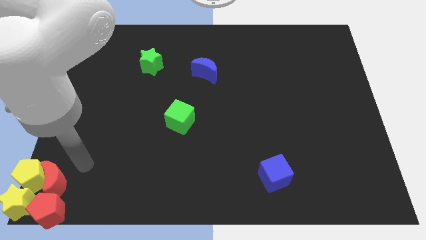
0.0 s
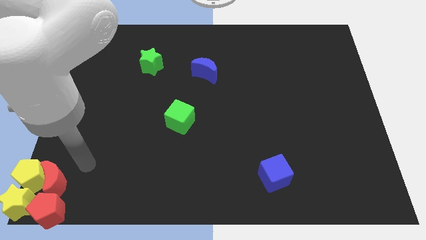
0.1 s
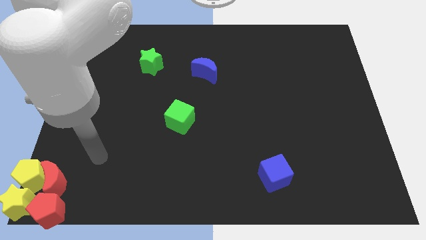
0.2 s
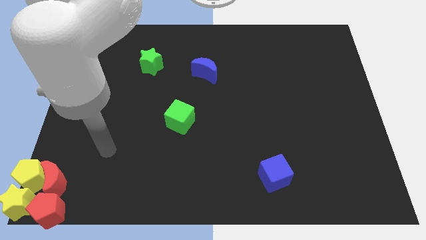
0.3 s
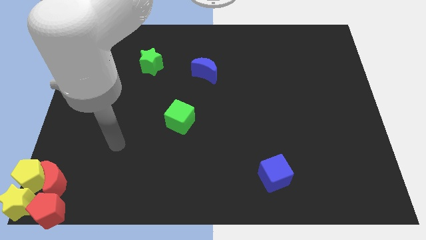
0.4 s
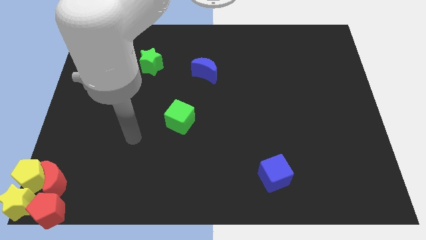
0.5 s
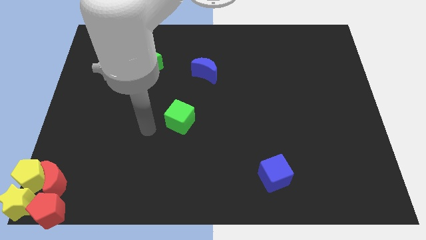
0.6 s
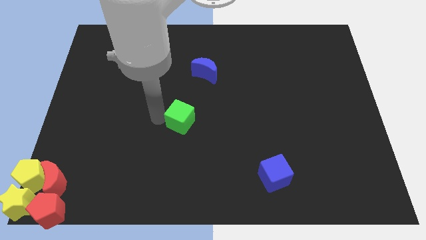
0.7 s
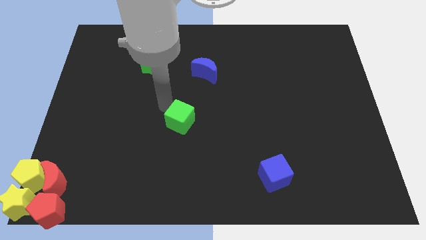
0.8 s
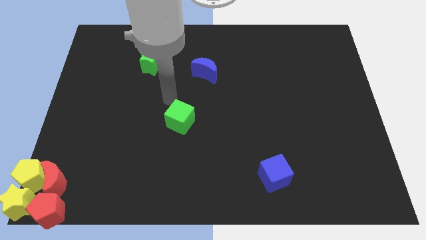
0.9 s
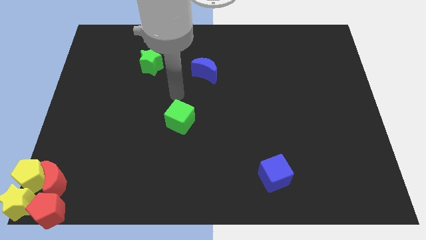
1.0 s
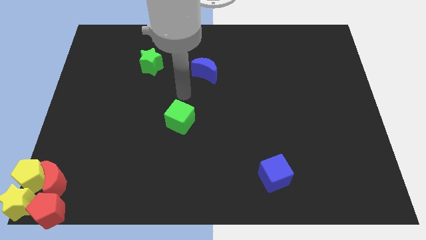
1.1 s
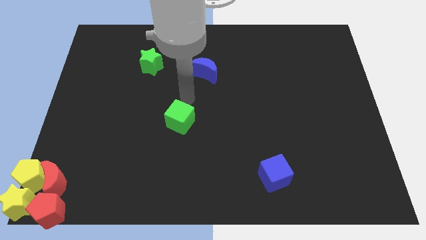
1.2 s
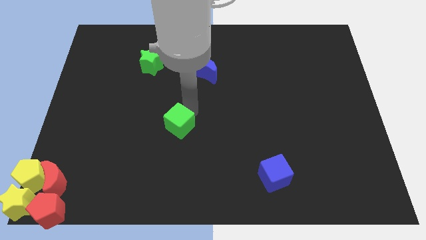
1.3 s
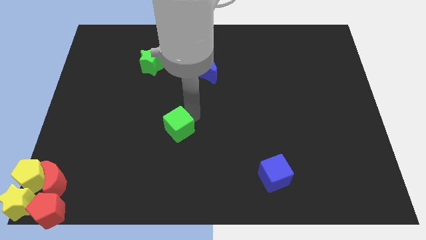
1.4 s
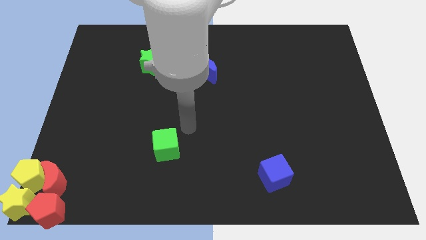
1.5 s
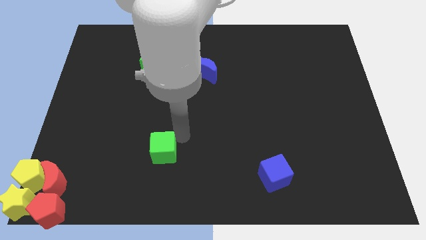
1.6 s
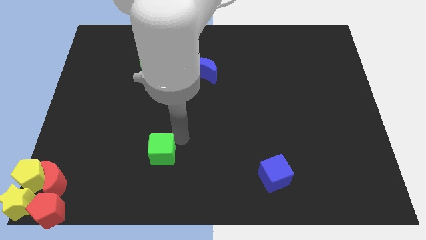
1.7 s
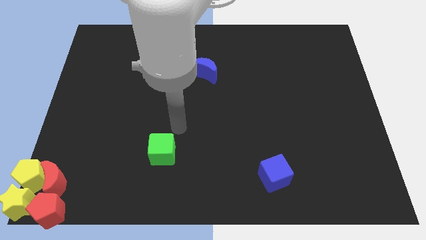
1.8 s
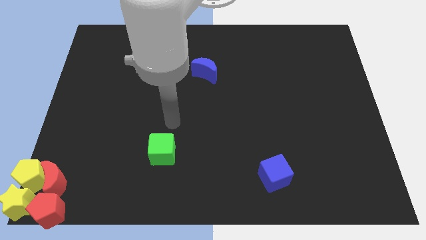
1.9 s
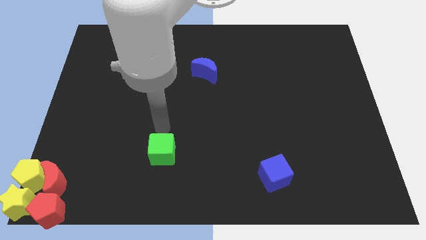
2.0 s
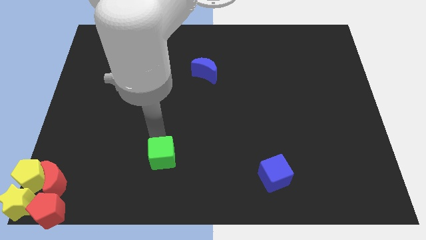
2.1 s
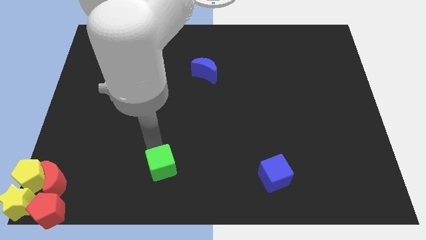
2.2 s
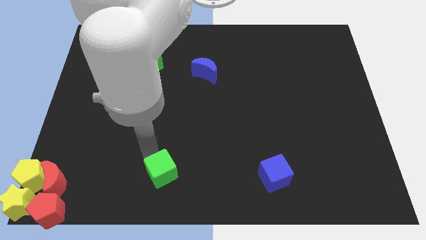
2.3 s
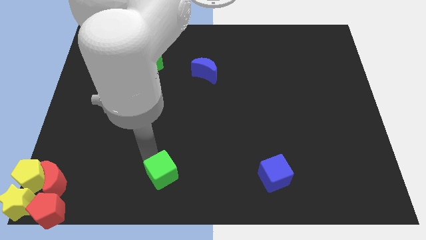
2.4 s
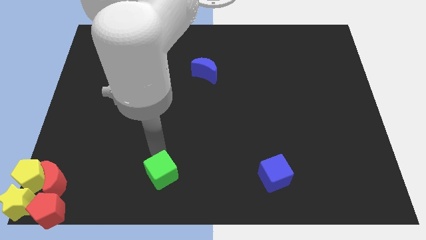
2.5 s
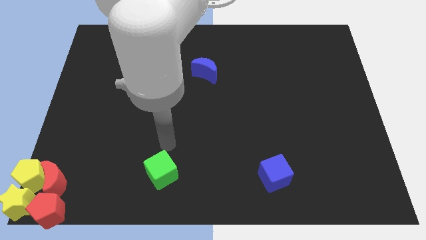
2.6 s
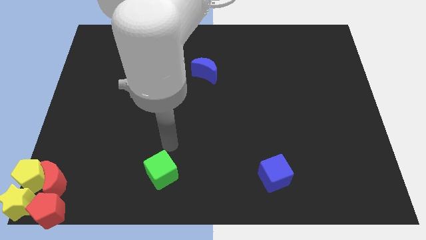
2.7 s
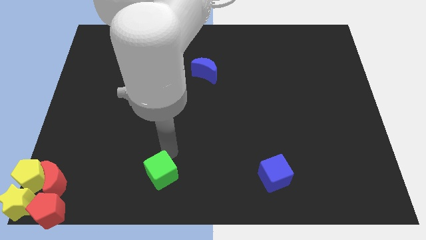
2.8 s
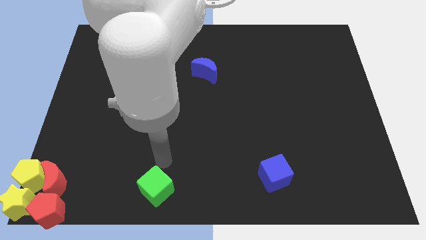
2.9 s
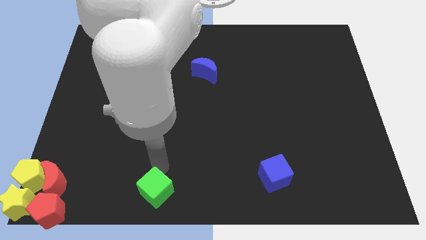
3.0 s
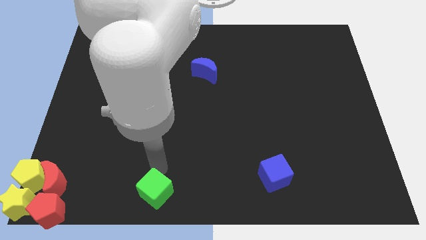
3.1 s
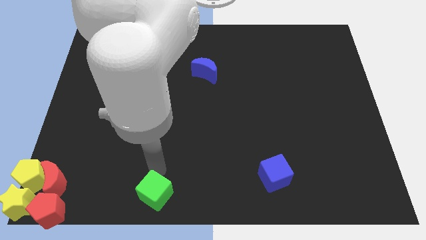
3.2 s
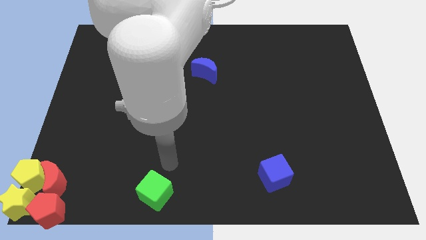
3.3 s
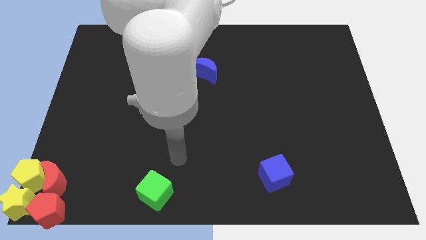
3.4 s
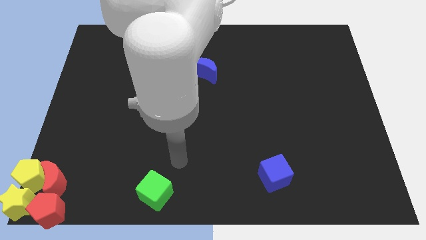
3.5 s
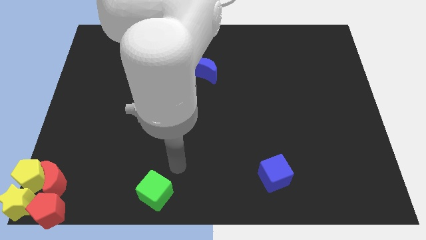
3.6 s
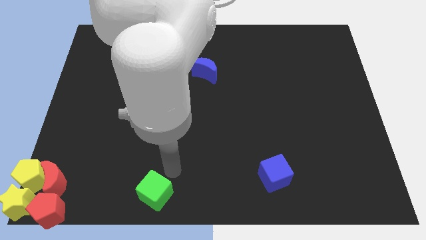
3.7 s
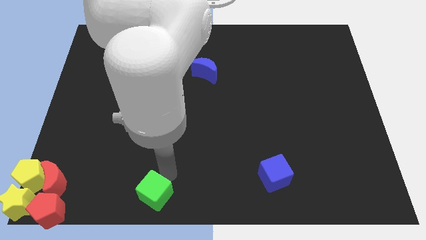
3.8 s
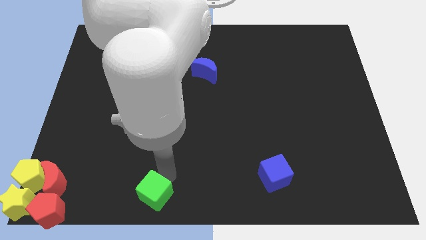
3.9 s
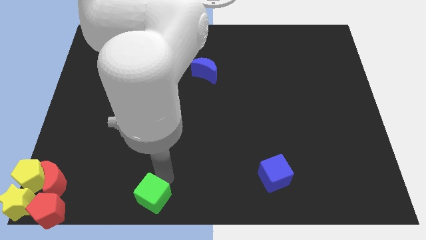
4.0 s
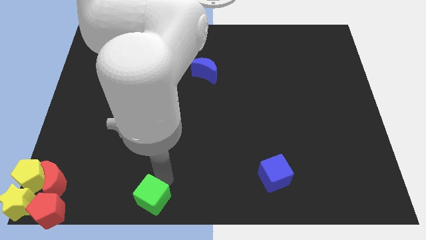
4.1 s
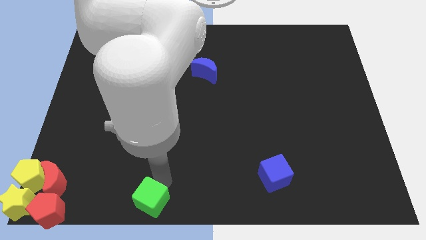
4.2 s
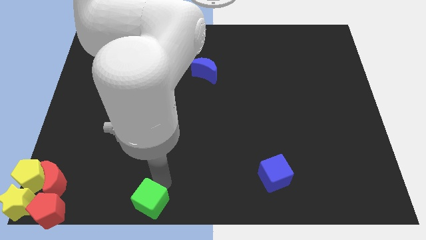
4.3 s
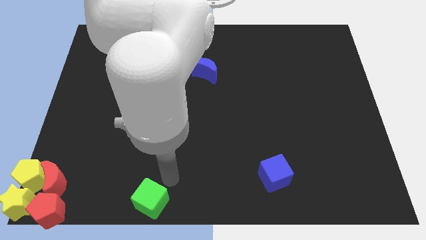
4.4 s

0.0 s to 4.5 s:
move the green cube to the right of the red pentagon

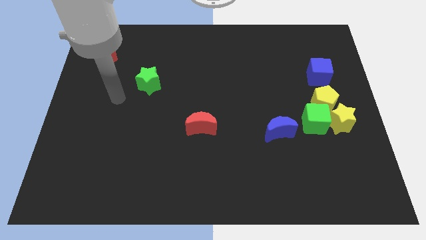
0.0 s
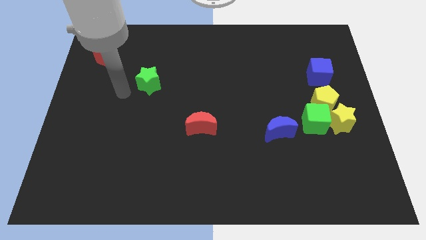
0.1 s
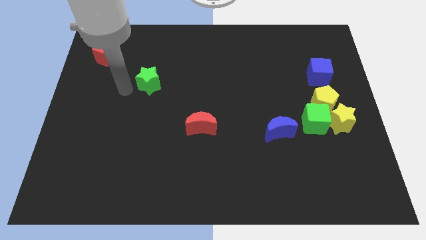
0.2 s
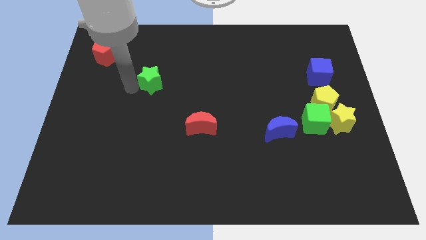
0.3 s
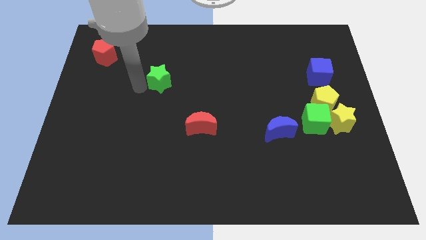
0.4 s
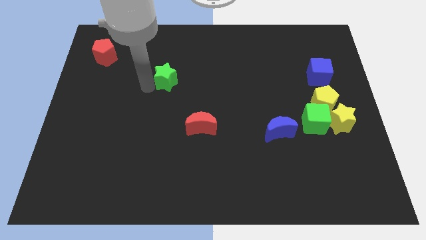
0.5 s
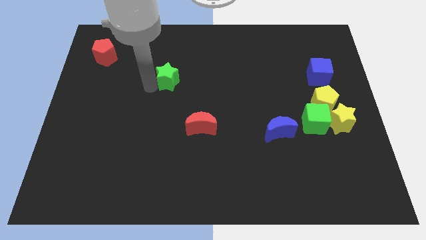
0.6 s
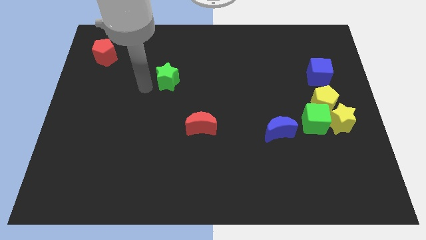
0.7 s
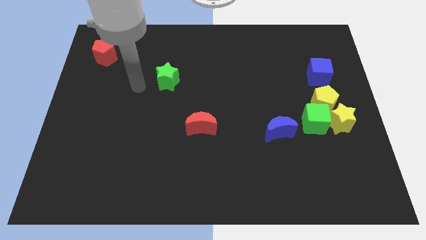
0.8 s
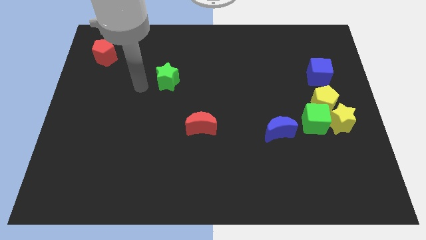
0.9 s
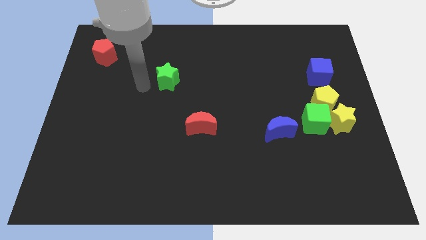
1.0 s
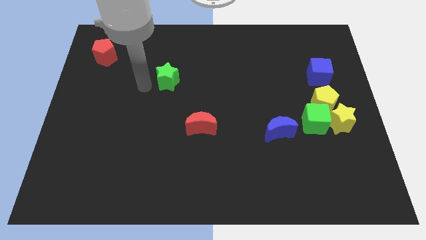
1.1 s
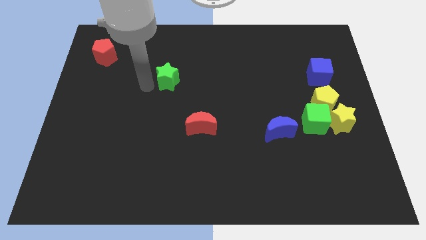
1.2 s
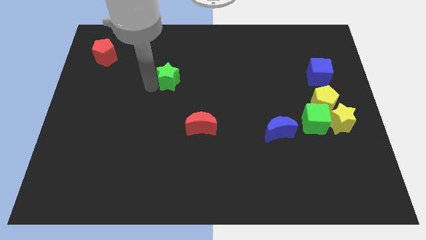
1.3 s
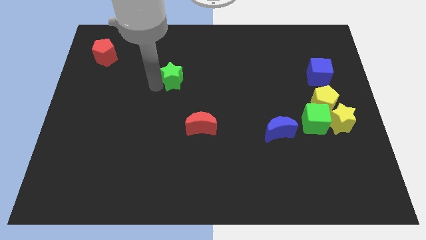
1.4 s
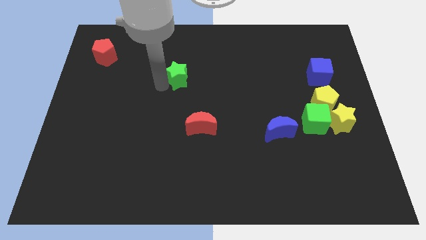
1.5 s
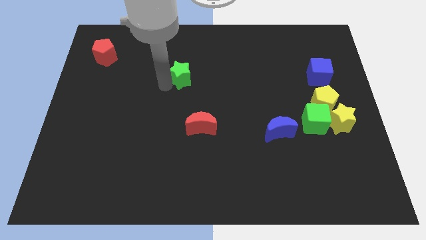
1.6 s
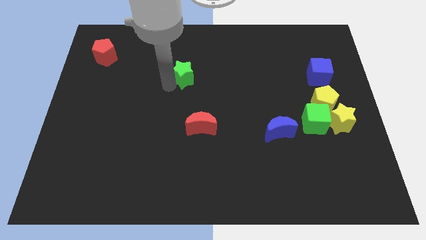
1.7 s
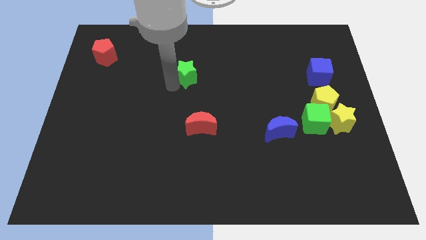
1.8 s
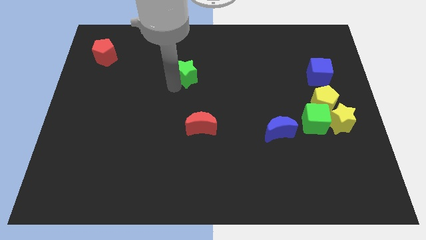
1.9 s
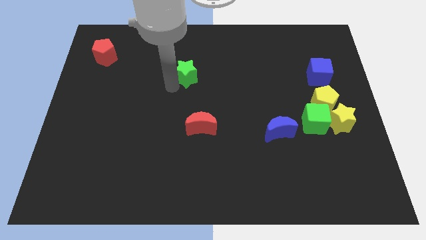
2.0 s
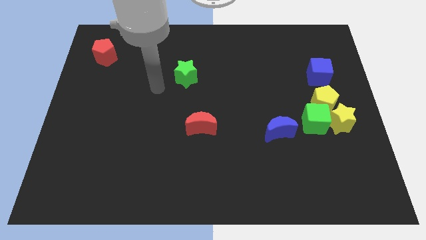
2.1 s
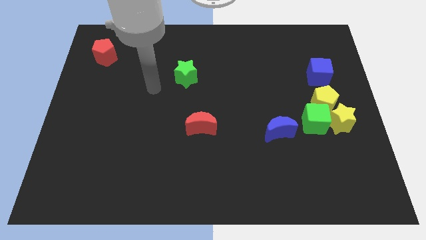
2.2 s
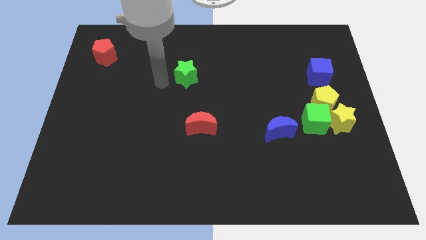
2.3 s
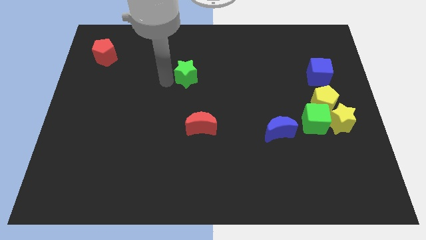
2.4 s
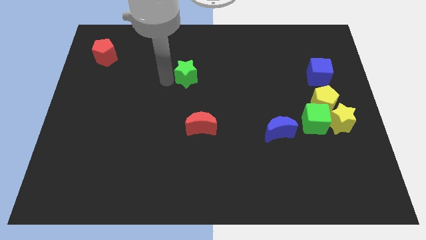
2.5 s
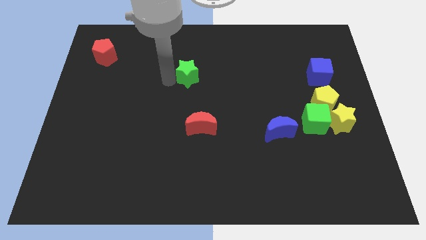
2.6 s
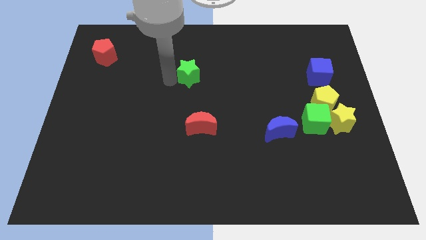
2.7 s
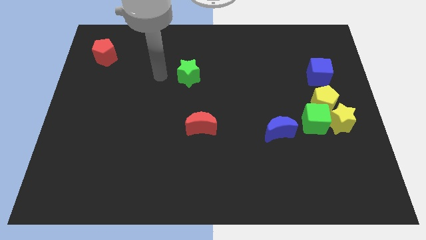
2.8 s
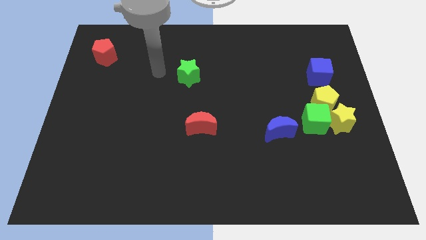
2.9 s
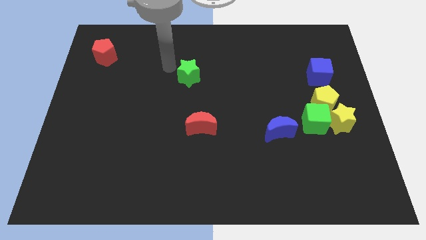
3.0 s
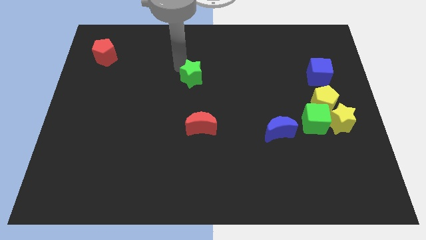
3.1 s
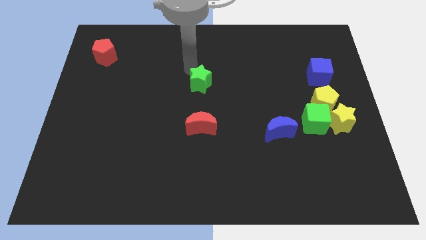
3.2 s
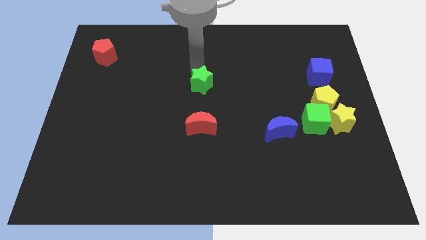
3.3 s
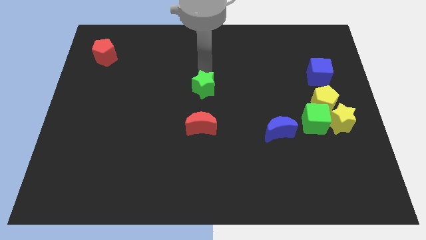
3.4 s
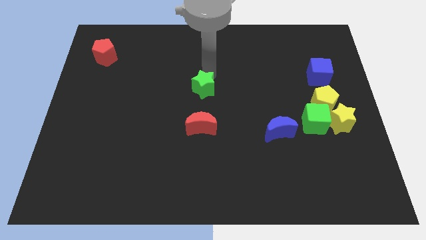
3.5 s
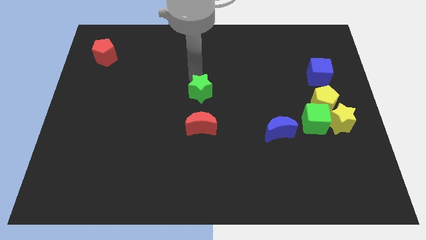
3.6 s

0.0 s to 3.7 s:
place the green star at the center of the board

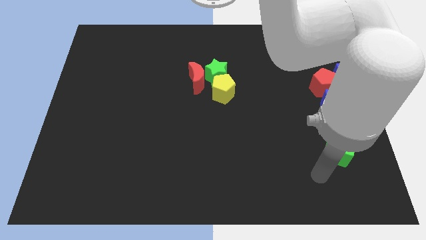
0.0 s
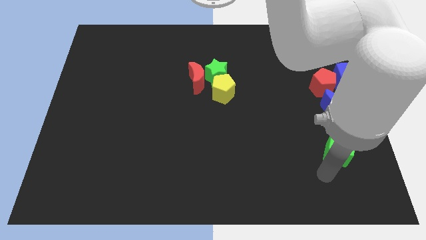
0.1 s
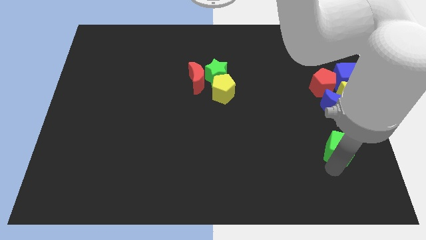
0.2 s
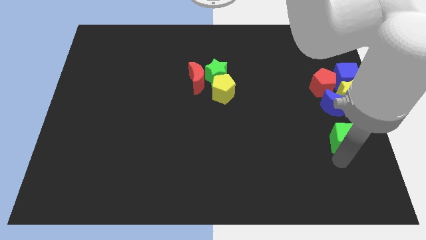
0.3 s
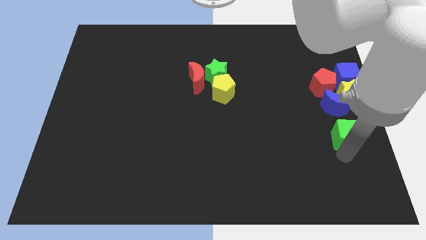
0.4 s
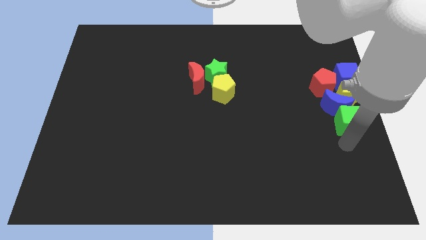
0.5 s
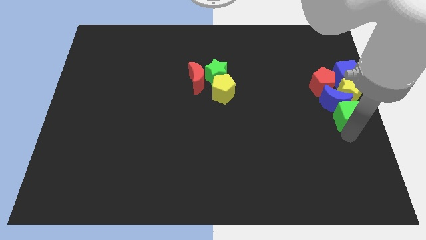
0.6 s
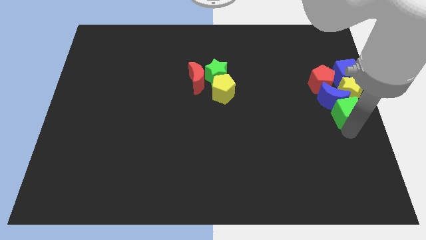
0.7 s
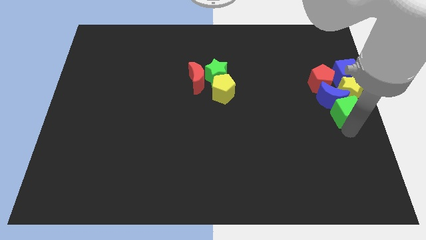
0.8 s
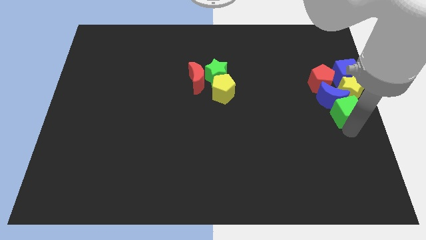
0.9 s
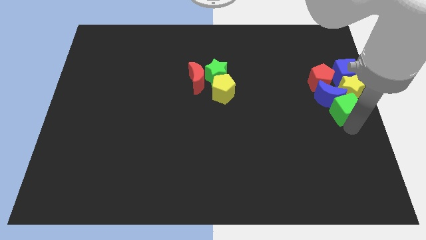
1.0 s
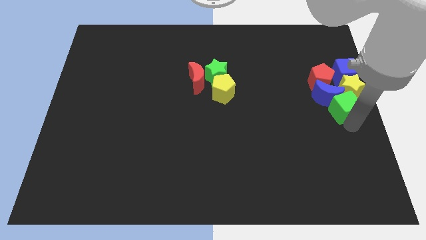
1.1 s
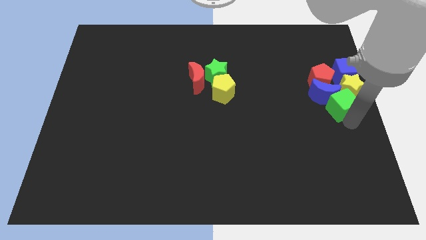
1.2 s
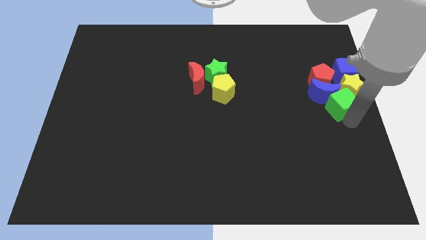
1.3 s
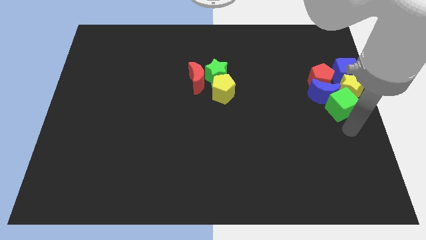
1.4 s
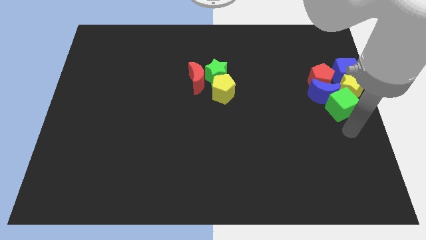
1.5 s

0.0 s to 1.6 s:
slide the green cube into the group of blocks
